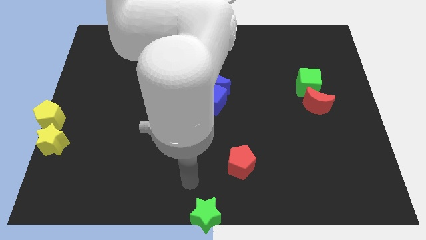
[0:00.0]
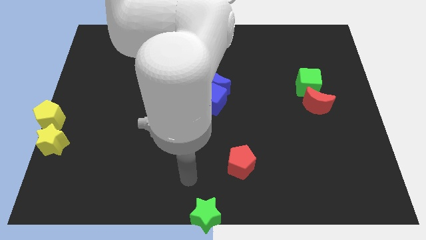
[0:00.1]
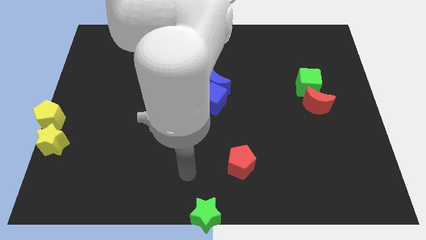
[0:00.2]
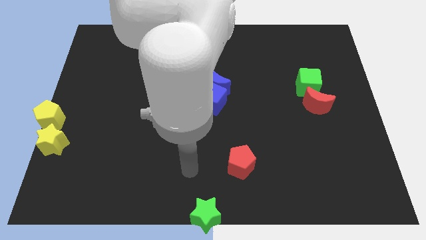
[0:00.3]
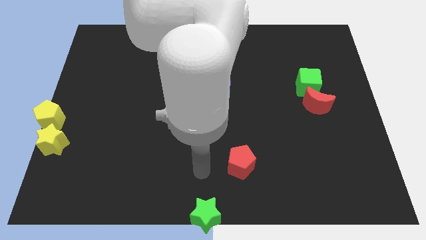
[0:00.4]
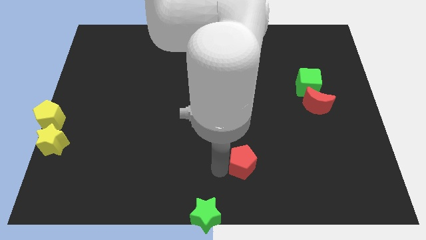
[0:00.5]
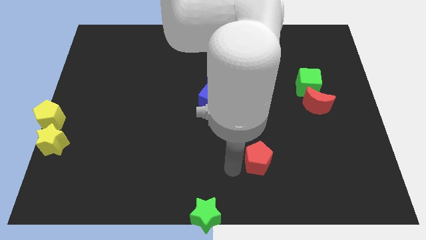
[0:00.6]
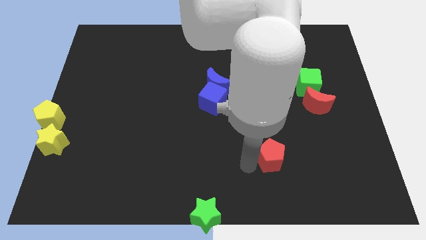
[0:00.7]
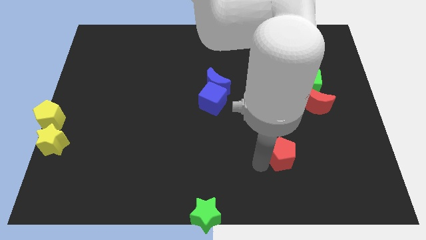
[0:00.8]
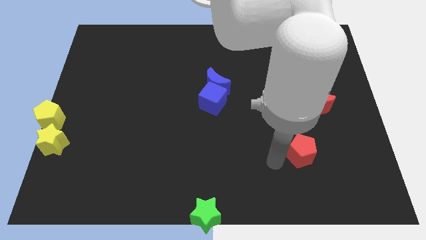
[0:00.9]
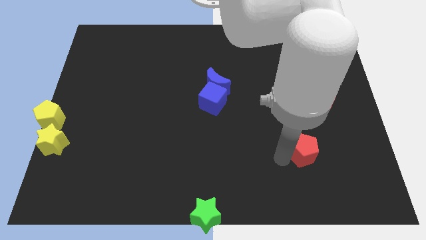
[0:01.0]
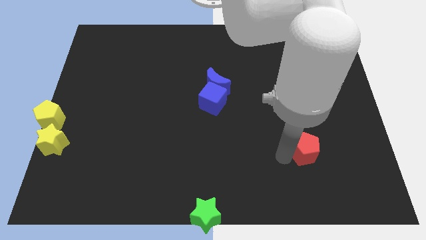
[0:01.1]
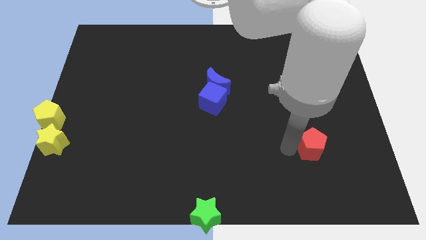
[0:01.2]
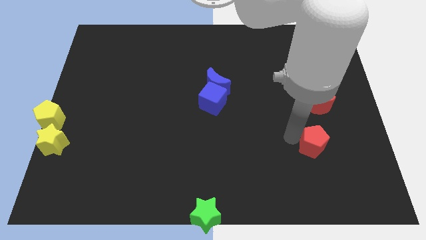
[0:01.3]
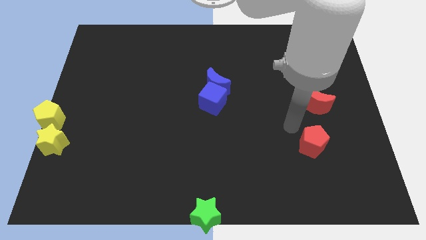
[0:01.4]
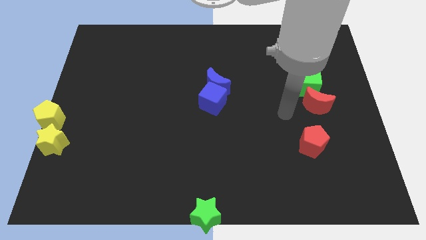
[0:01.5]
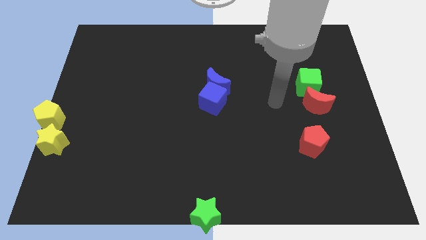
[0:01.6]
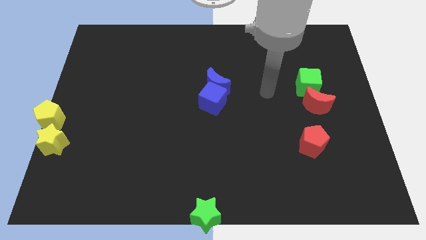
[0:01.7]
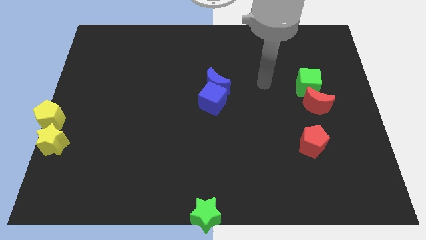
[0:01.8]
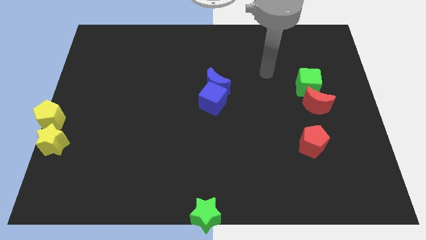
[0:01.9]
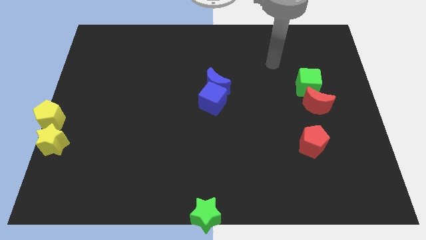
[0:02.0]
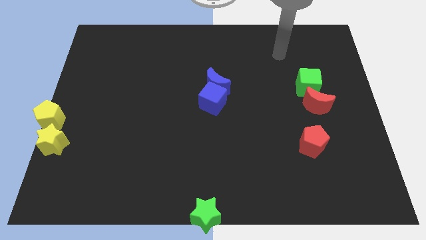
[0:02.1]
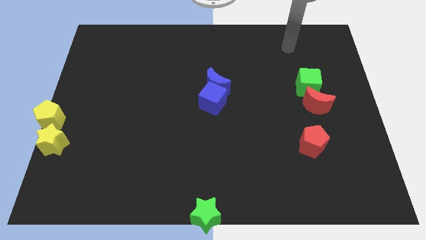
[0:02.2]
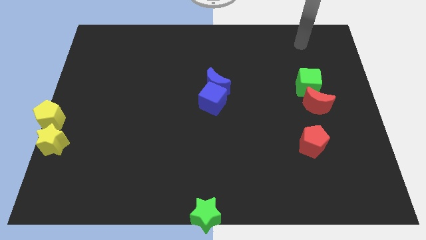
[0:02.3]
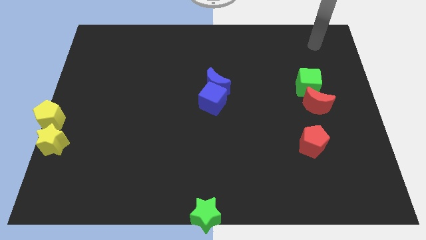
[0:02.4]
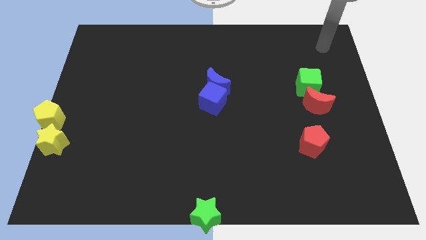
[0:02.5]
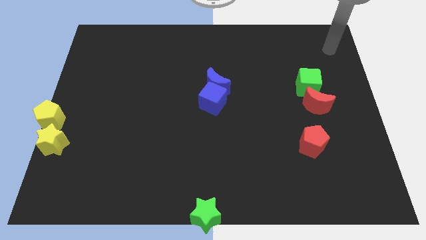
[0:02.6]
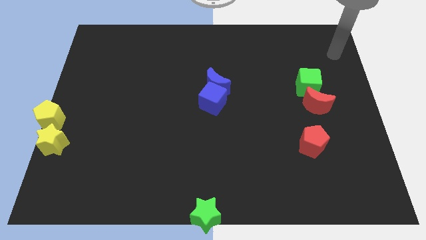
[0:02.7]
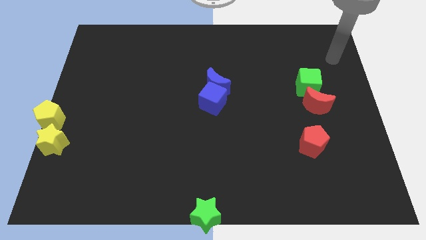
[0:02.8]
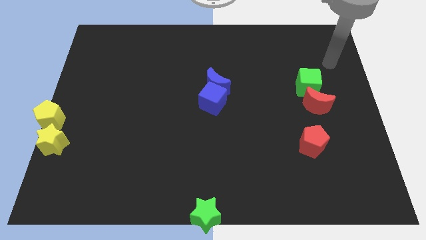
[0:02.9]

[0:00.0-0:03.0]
move the red pentagon parallel below the red crescent

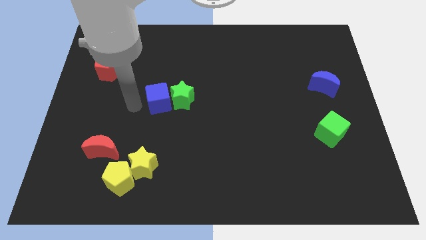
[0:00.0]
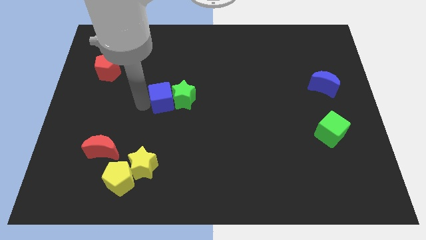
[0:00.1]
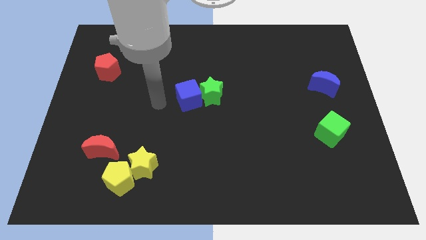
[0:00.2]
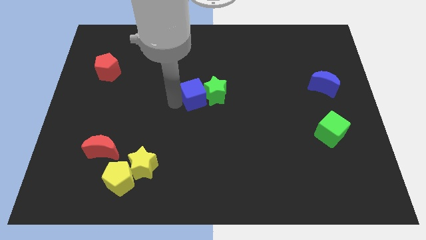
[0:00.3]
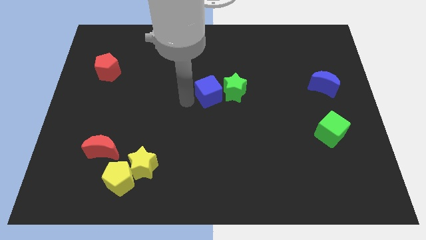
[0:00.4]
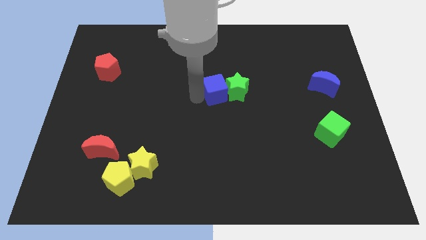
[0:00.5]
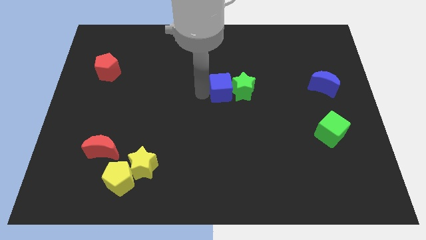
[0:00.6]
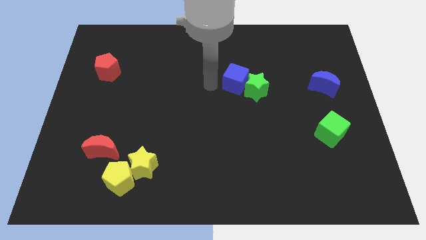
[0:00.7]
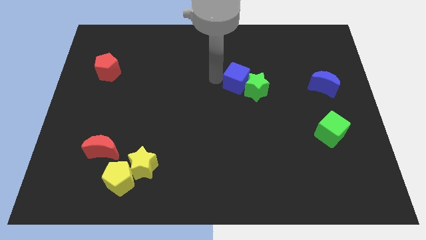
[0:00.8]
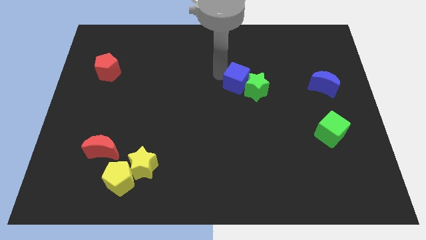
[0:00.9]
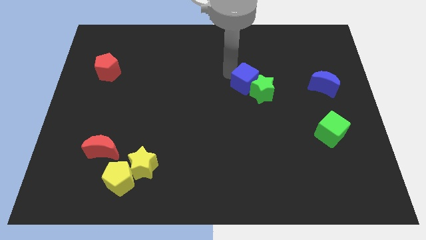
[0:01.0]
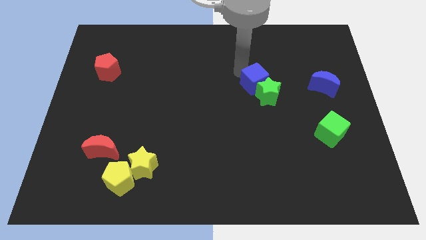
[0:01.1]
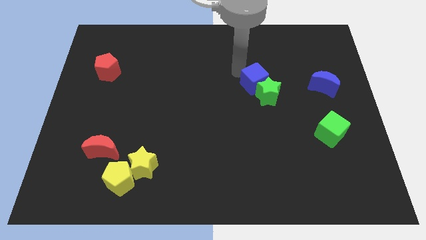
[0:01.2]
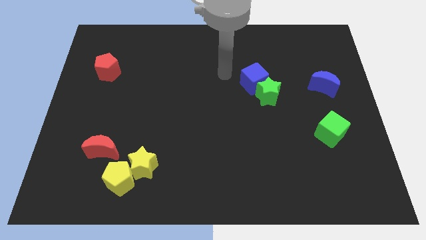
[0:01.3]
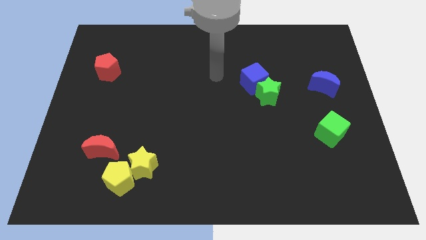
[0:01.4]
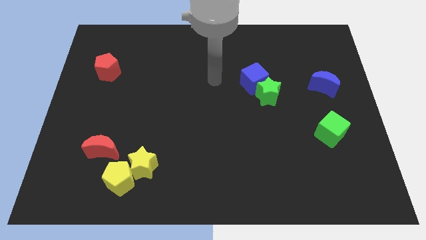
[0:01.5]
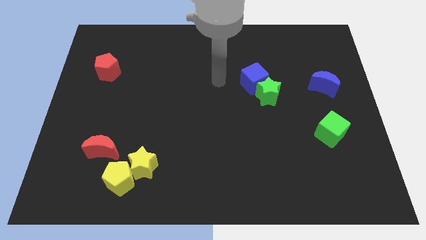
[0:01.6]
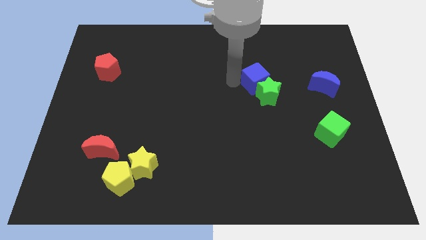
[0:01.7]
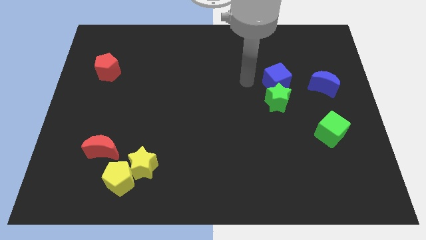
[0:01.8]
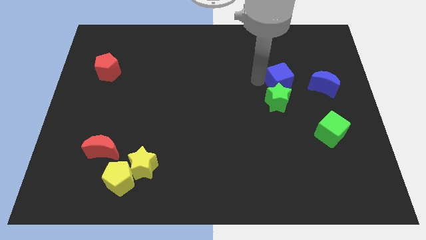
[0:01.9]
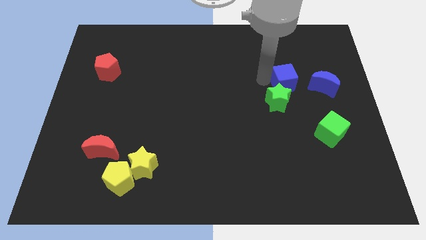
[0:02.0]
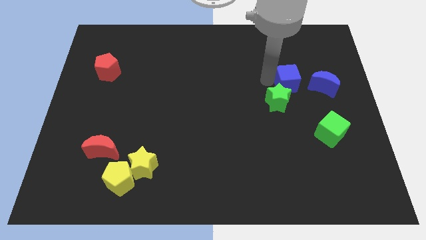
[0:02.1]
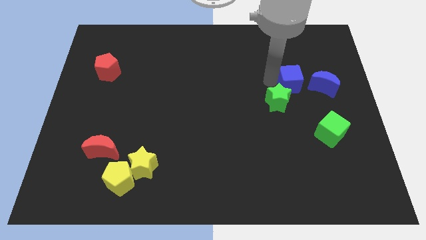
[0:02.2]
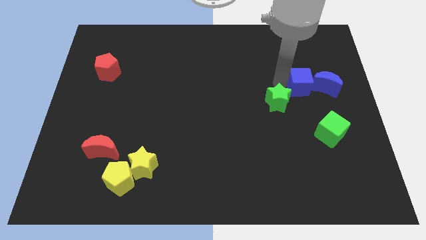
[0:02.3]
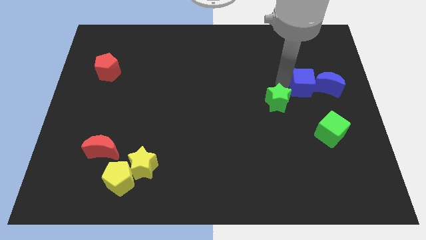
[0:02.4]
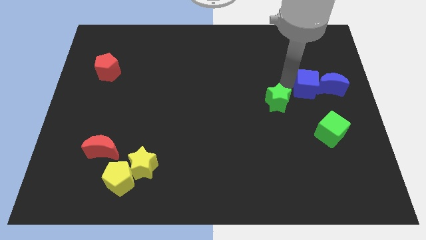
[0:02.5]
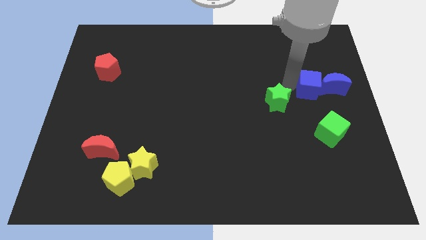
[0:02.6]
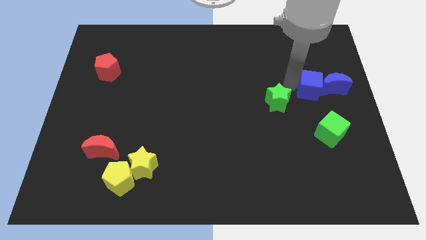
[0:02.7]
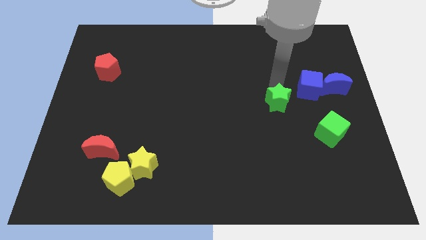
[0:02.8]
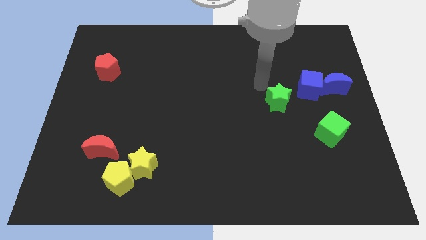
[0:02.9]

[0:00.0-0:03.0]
move the blue cube to the left of the blue crescent

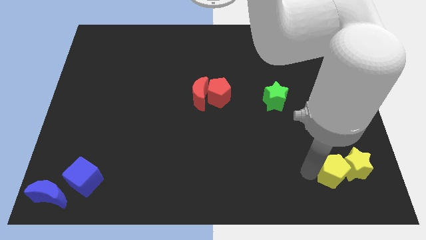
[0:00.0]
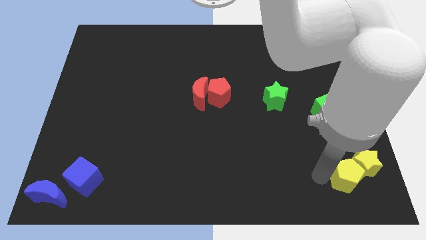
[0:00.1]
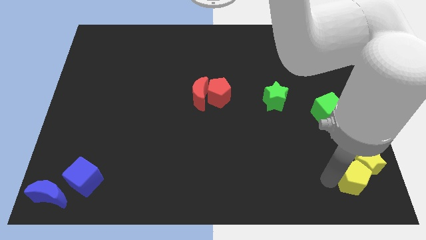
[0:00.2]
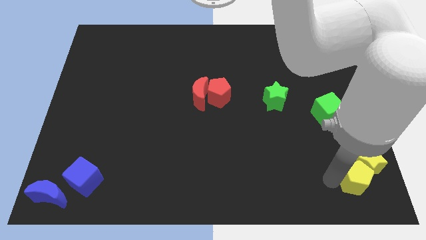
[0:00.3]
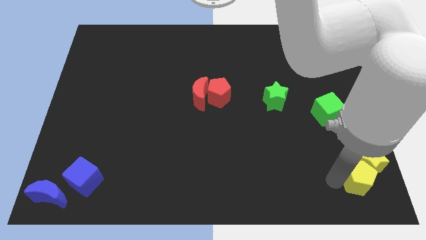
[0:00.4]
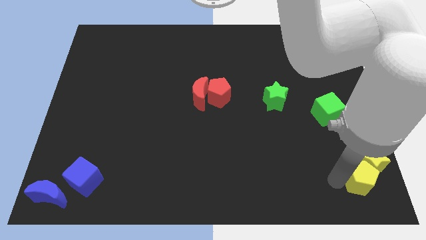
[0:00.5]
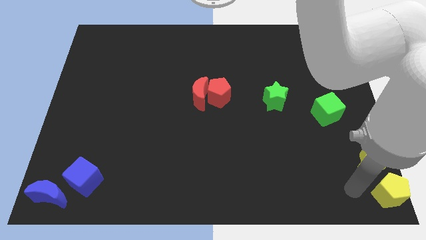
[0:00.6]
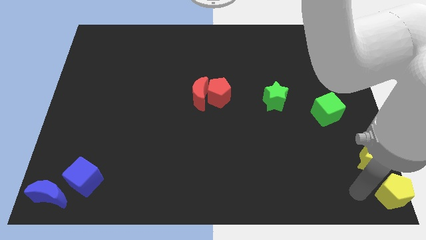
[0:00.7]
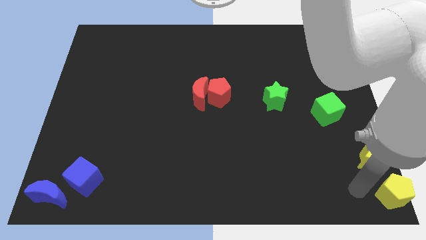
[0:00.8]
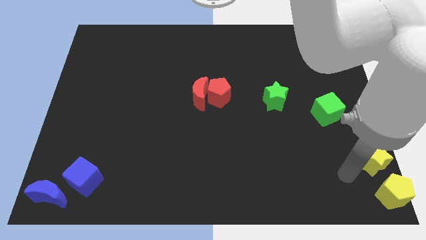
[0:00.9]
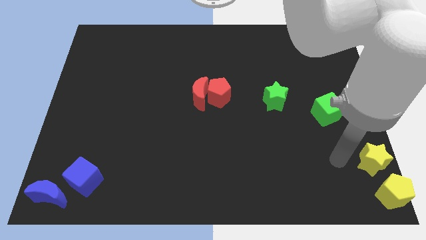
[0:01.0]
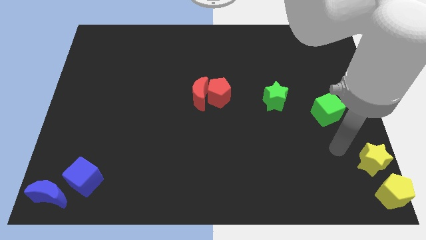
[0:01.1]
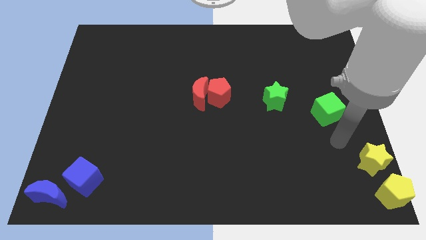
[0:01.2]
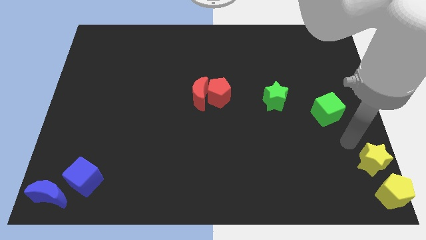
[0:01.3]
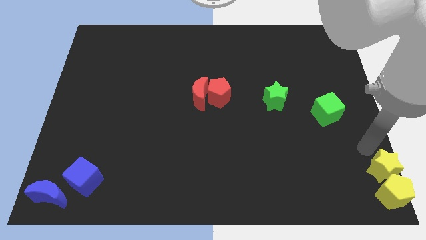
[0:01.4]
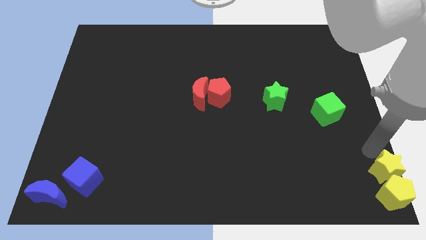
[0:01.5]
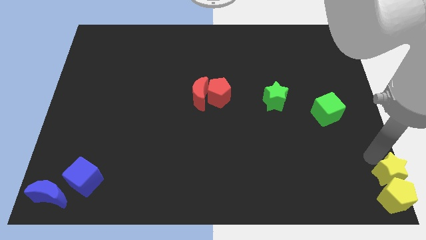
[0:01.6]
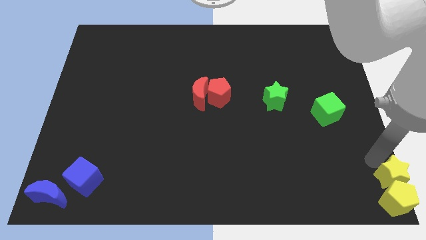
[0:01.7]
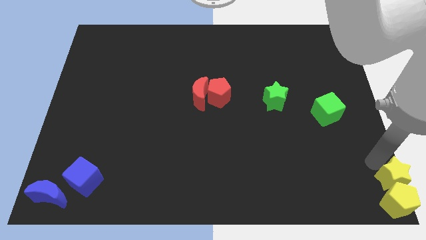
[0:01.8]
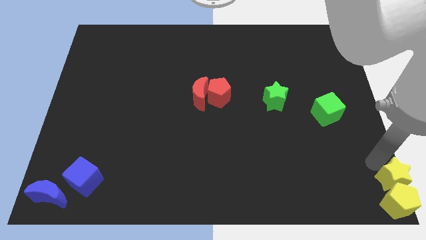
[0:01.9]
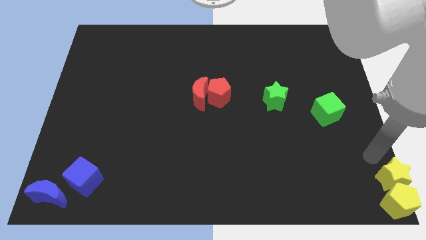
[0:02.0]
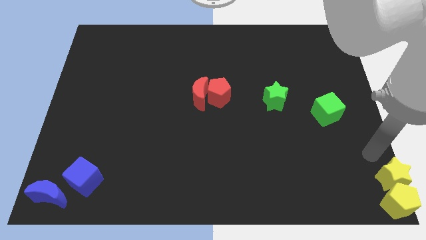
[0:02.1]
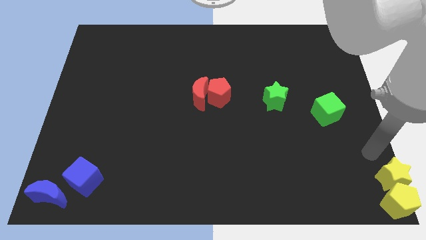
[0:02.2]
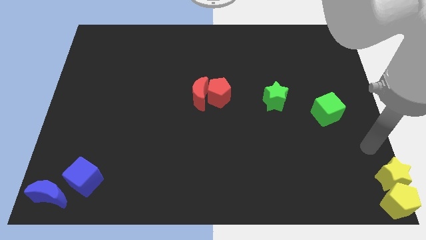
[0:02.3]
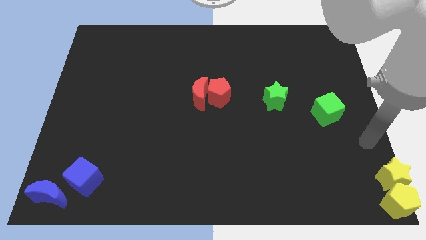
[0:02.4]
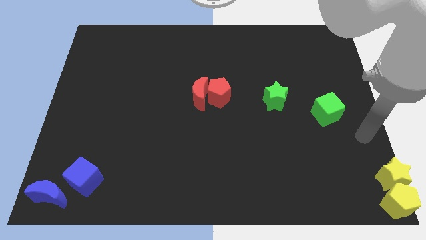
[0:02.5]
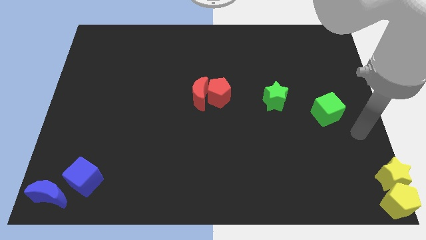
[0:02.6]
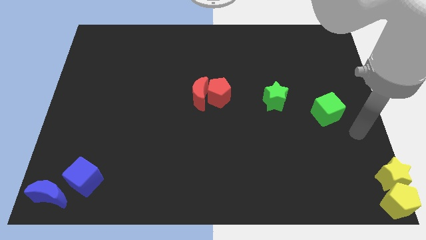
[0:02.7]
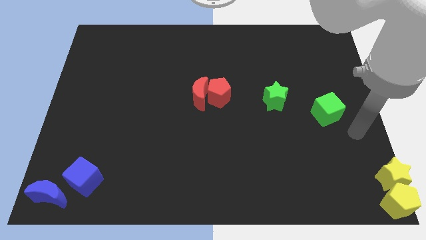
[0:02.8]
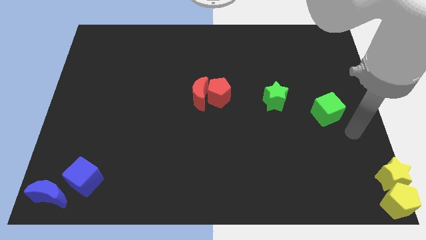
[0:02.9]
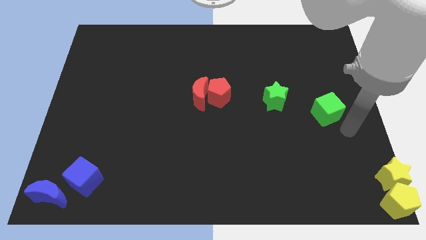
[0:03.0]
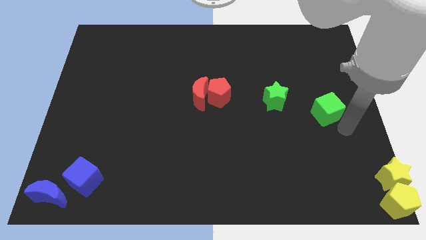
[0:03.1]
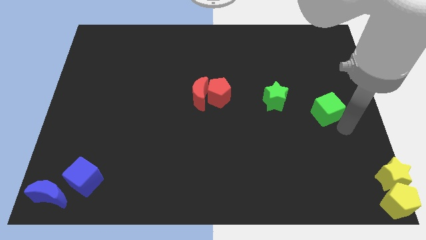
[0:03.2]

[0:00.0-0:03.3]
push yellow star and yellow pentagon to bottom right corner of the board
